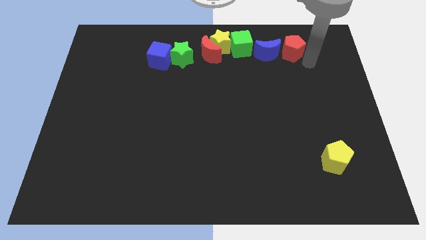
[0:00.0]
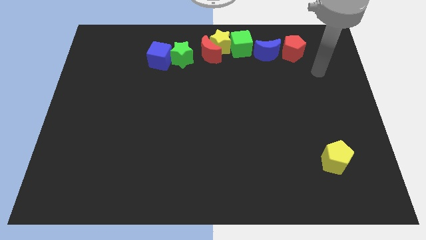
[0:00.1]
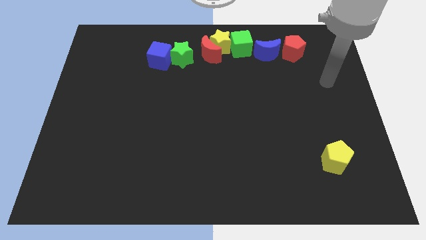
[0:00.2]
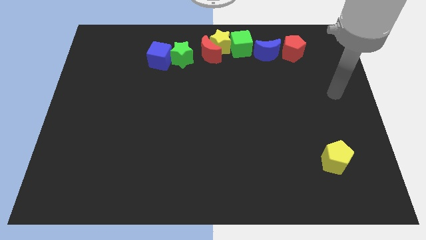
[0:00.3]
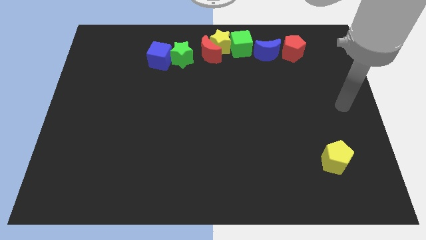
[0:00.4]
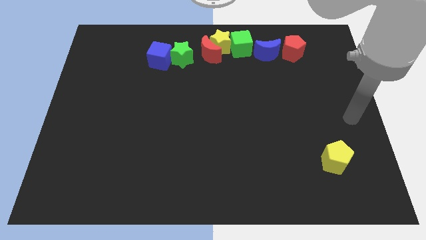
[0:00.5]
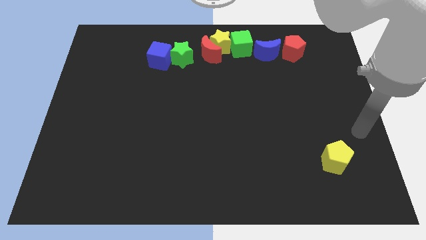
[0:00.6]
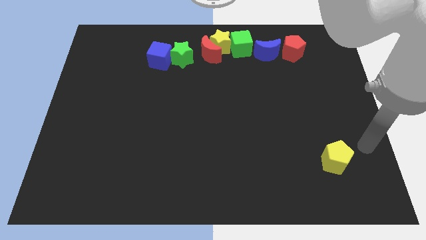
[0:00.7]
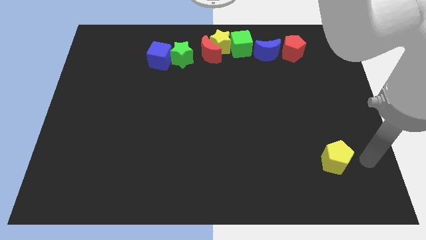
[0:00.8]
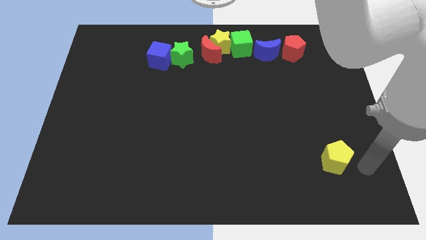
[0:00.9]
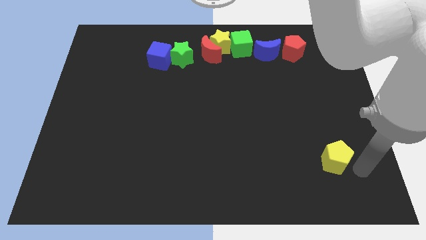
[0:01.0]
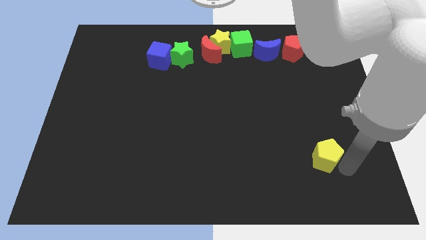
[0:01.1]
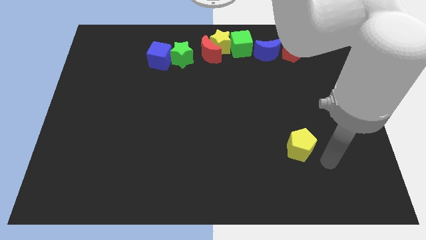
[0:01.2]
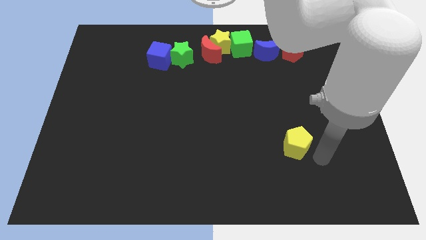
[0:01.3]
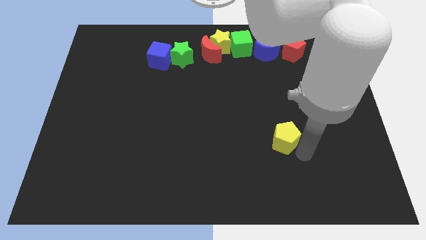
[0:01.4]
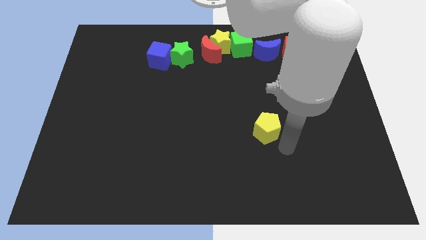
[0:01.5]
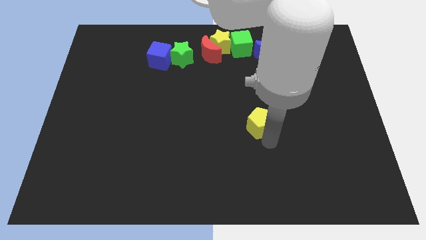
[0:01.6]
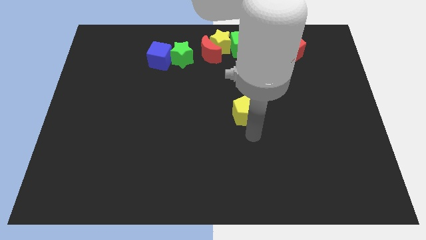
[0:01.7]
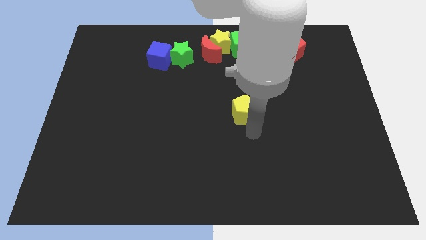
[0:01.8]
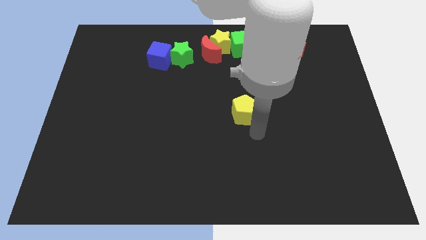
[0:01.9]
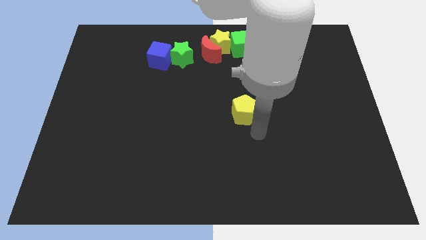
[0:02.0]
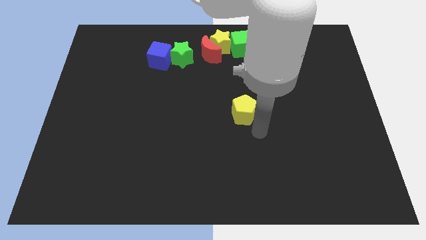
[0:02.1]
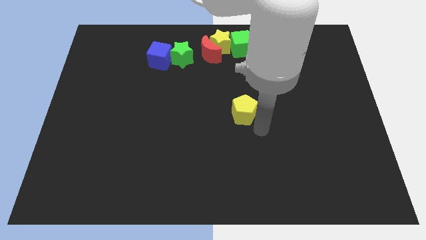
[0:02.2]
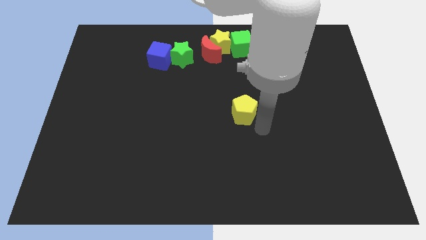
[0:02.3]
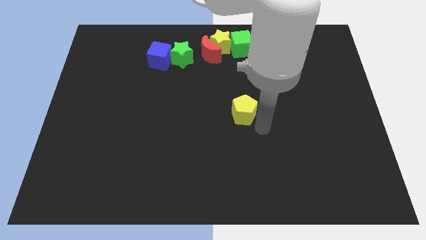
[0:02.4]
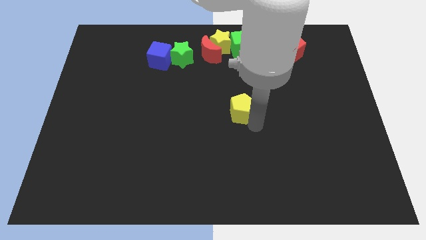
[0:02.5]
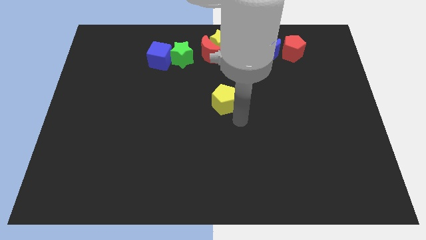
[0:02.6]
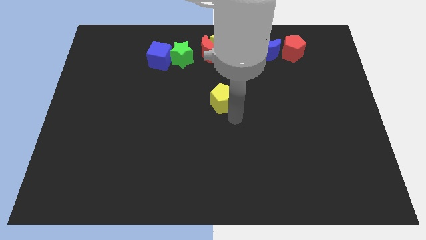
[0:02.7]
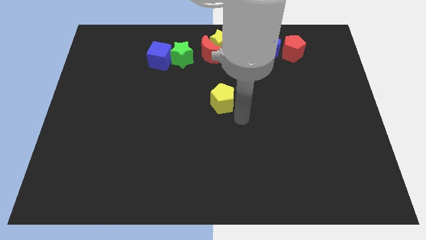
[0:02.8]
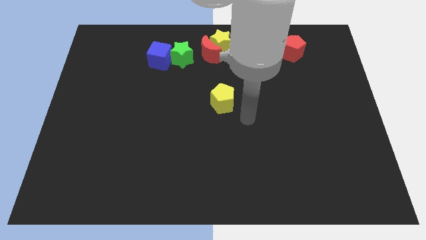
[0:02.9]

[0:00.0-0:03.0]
move the arm away from the red pentagon

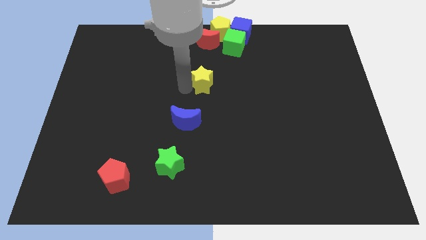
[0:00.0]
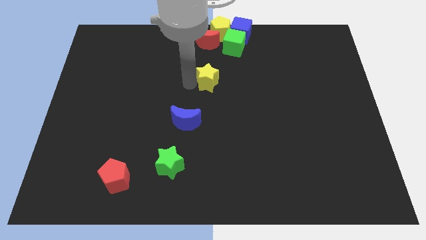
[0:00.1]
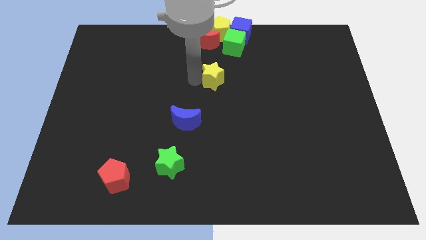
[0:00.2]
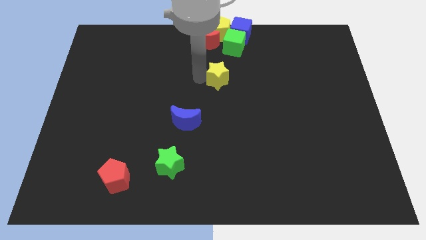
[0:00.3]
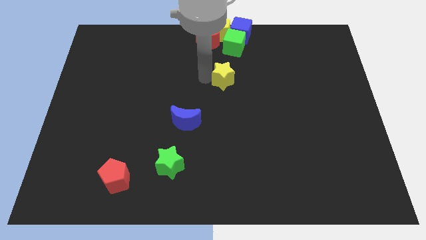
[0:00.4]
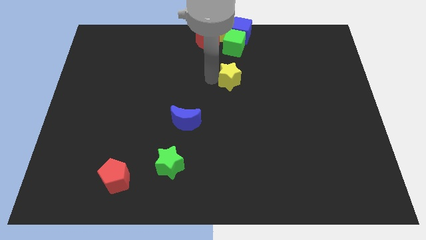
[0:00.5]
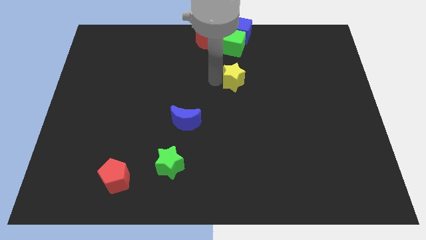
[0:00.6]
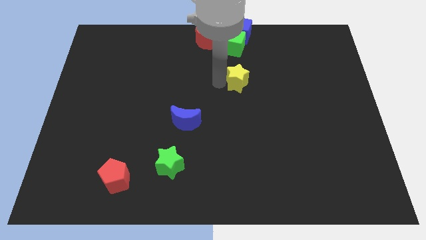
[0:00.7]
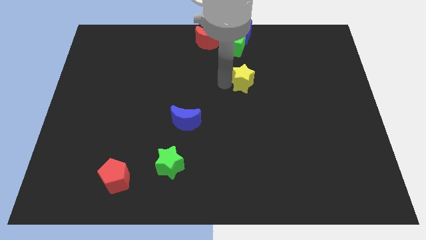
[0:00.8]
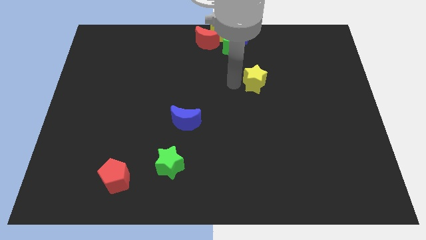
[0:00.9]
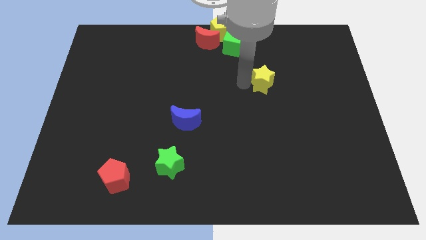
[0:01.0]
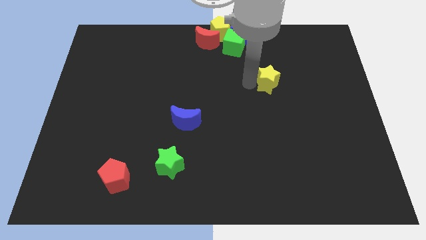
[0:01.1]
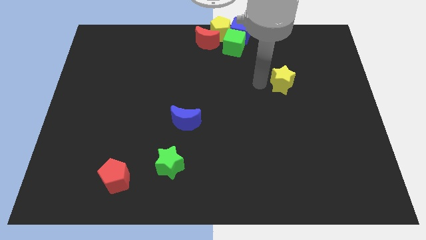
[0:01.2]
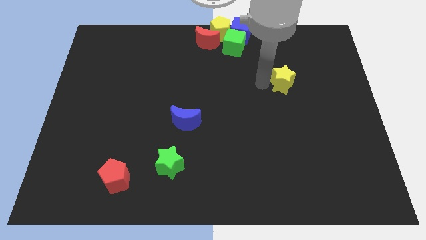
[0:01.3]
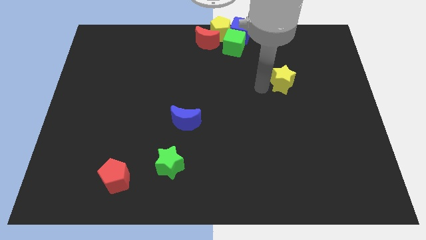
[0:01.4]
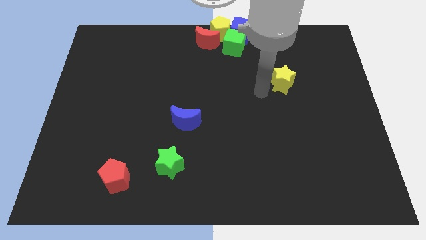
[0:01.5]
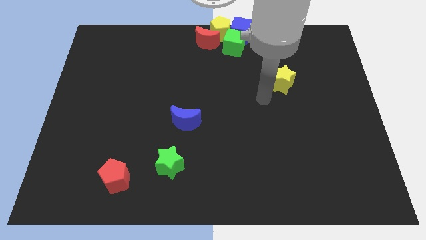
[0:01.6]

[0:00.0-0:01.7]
slide the yellow star to the right side

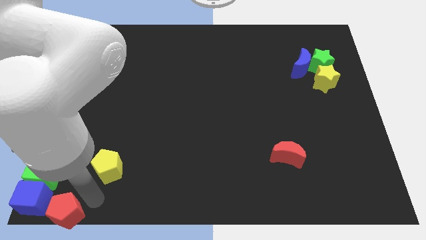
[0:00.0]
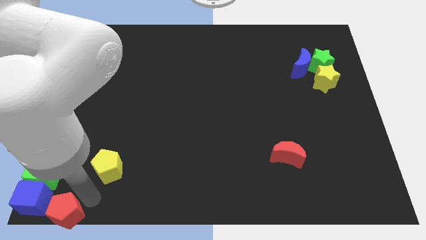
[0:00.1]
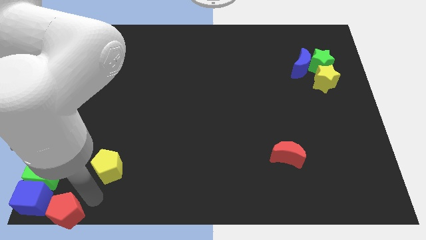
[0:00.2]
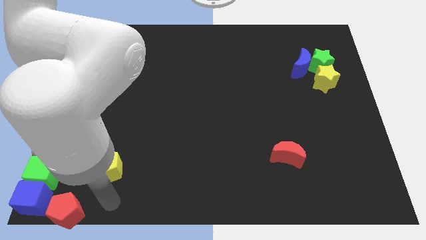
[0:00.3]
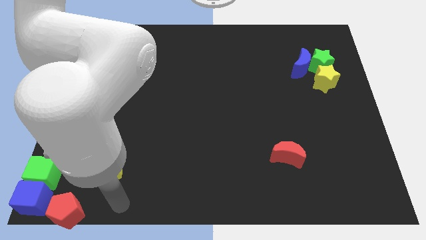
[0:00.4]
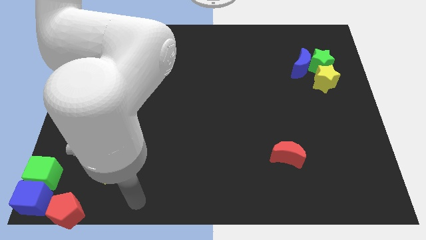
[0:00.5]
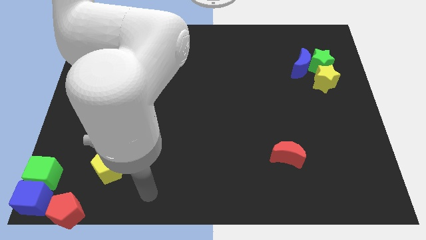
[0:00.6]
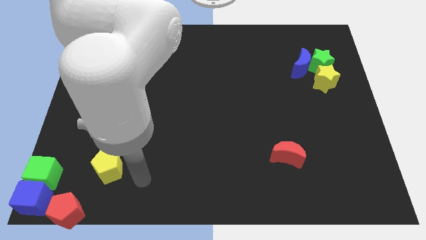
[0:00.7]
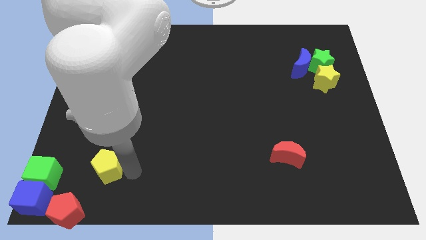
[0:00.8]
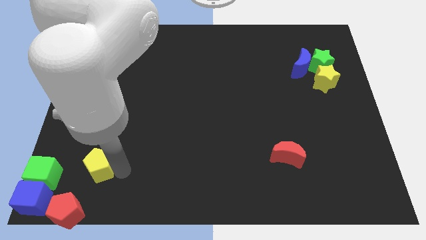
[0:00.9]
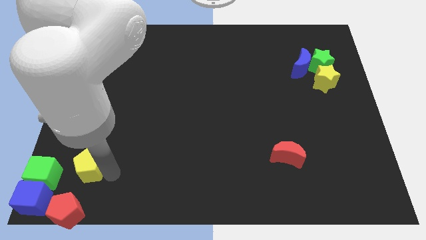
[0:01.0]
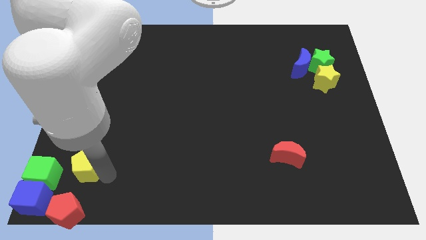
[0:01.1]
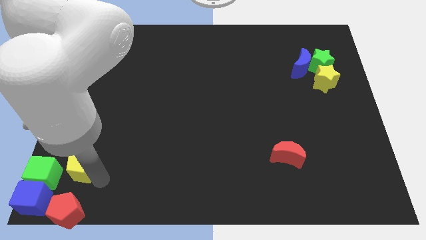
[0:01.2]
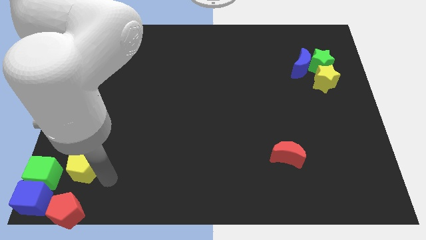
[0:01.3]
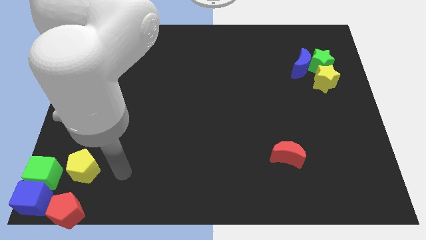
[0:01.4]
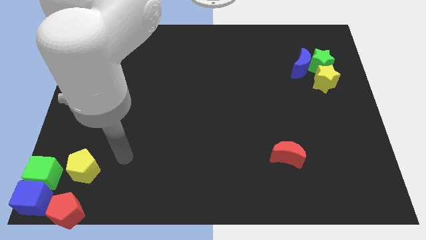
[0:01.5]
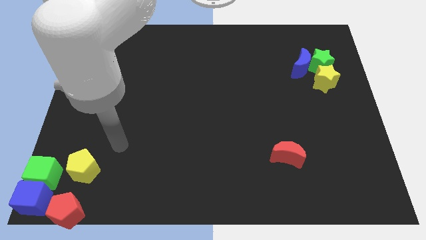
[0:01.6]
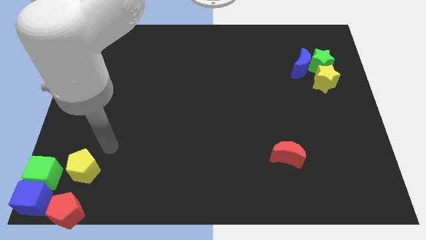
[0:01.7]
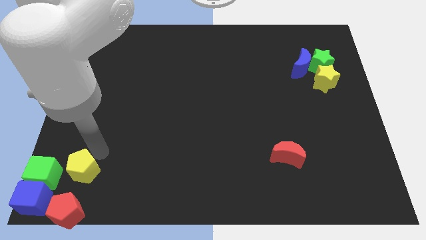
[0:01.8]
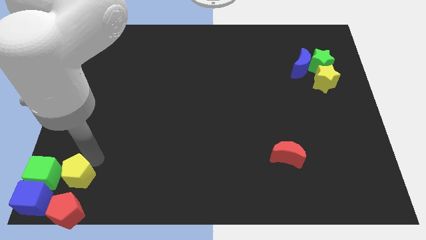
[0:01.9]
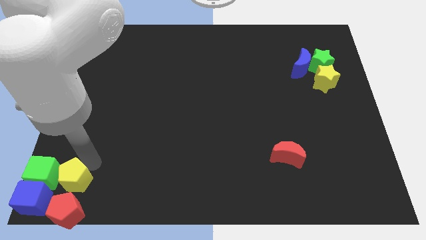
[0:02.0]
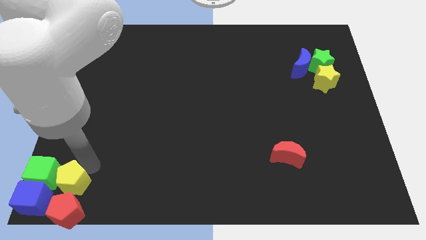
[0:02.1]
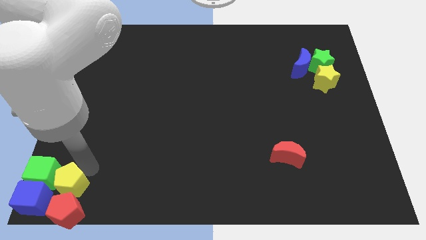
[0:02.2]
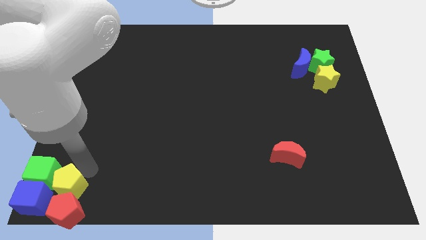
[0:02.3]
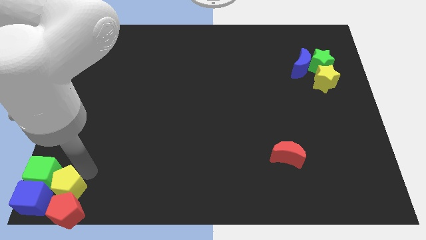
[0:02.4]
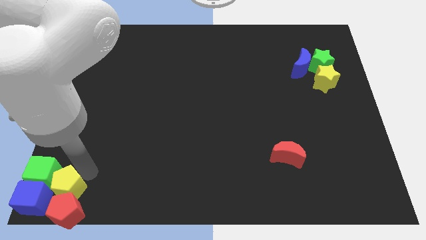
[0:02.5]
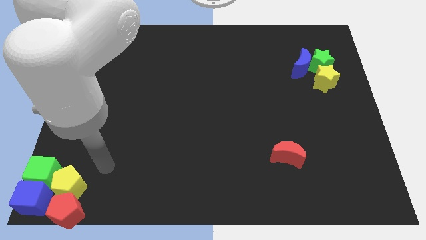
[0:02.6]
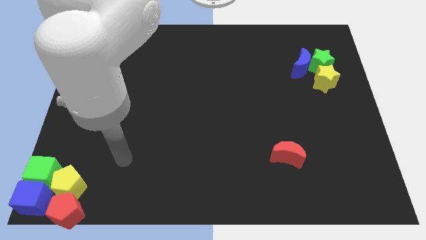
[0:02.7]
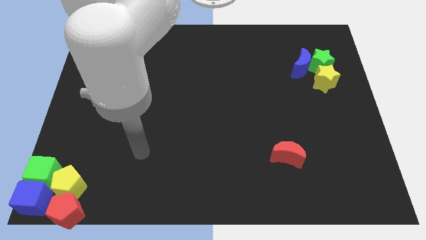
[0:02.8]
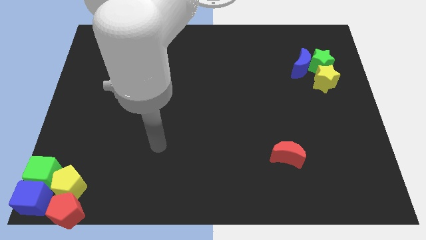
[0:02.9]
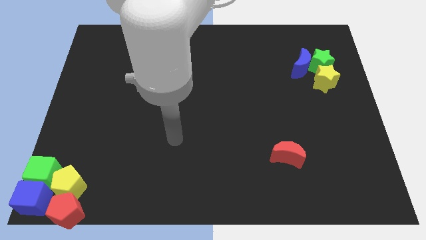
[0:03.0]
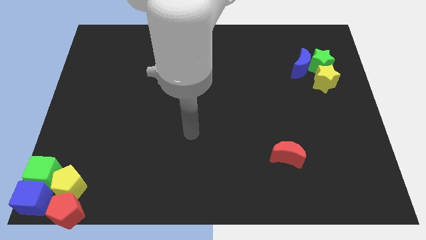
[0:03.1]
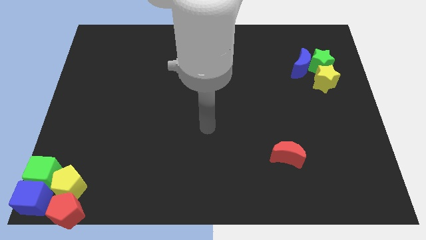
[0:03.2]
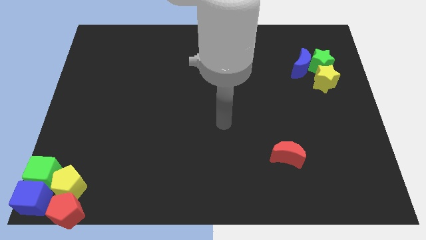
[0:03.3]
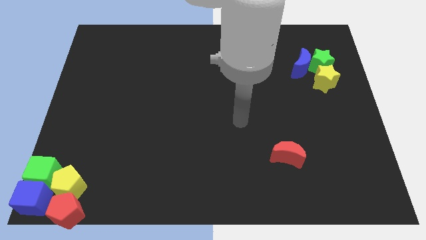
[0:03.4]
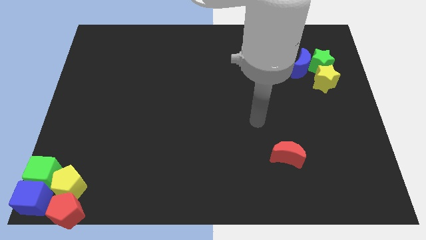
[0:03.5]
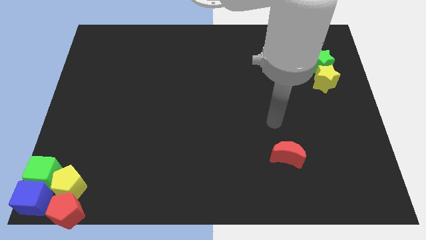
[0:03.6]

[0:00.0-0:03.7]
place the yellow pentagon above the red pentagon

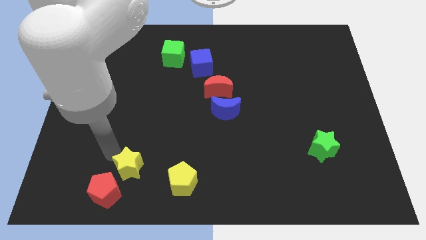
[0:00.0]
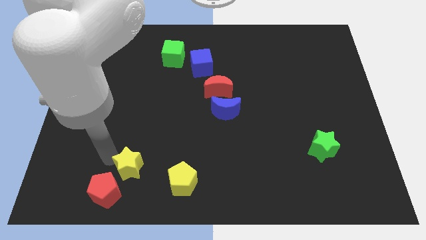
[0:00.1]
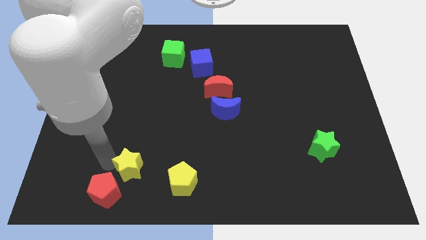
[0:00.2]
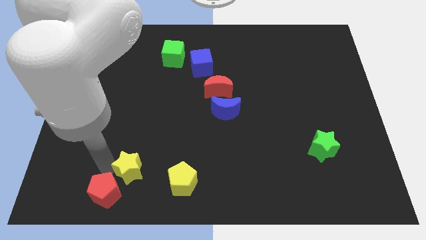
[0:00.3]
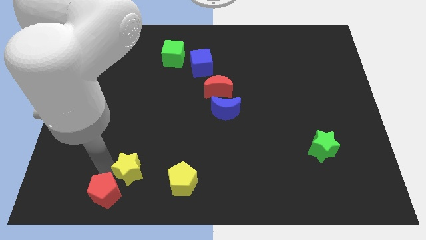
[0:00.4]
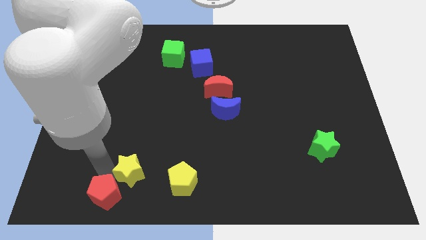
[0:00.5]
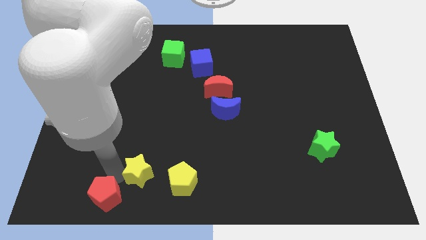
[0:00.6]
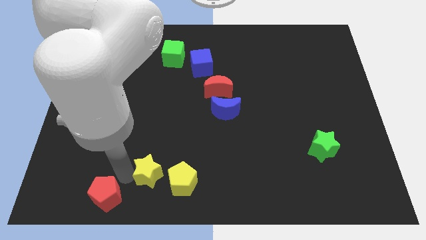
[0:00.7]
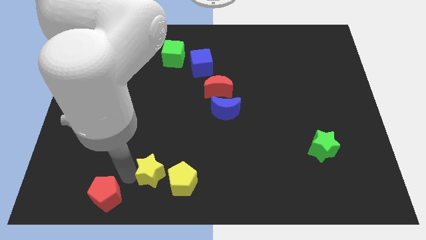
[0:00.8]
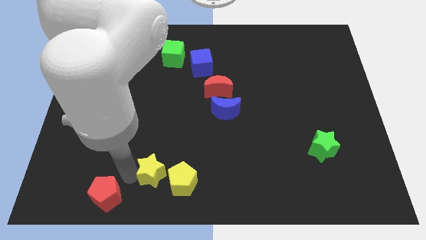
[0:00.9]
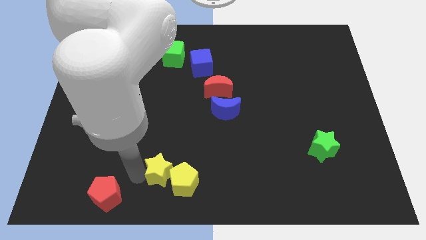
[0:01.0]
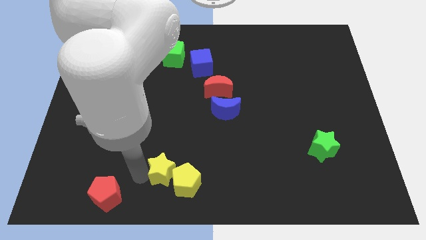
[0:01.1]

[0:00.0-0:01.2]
push the yellow star into the yellow pentagon
